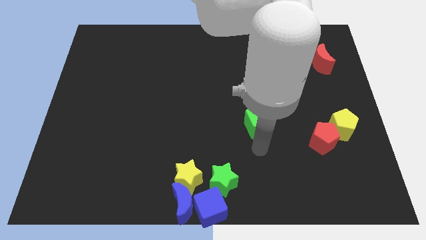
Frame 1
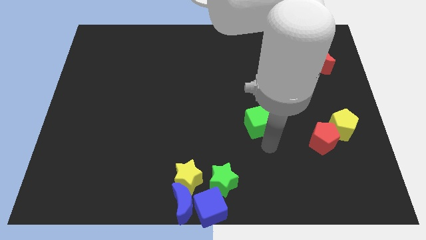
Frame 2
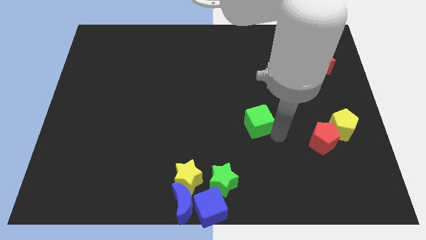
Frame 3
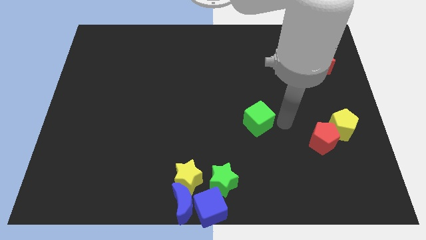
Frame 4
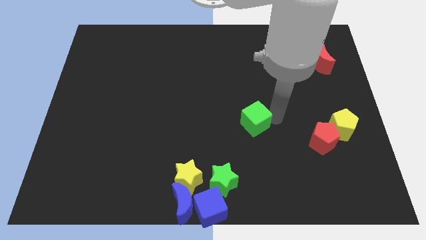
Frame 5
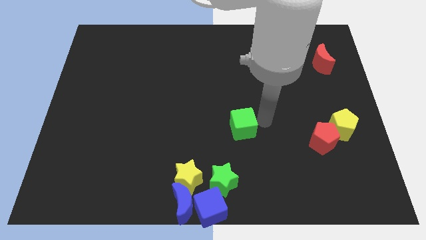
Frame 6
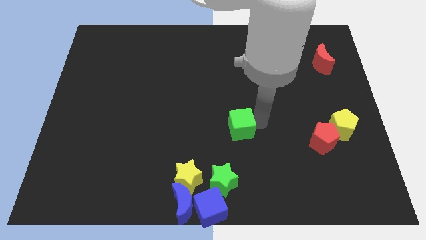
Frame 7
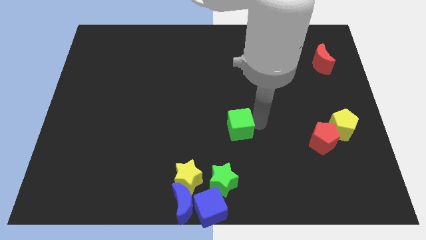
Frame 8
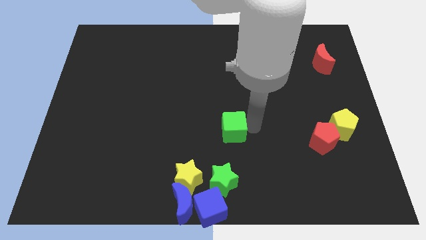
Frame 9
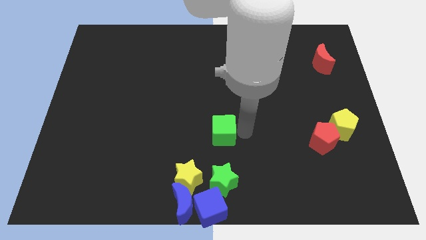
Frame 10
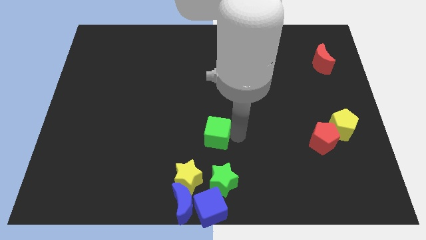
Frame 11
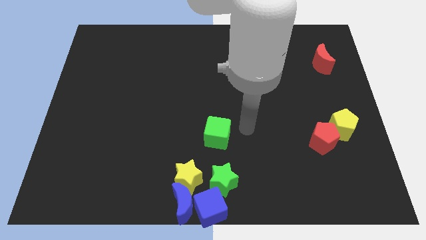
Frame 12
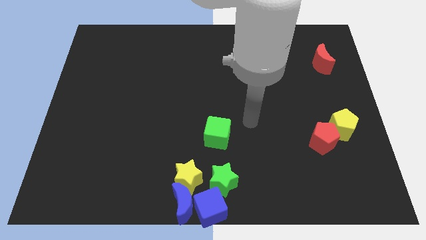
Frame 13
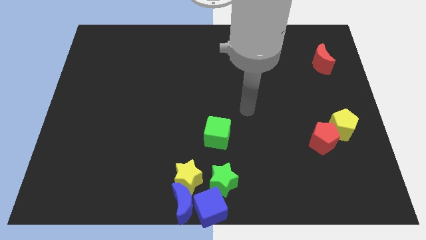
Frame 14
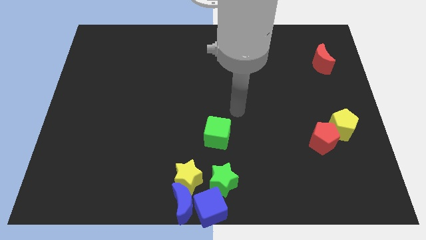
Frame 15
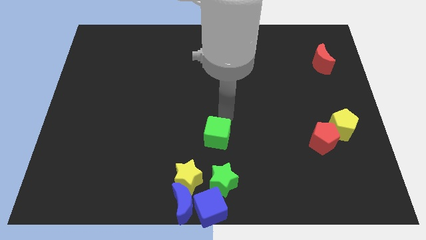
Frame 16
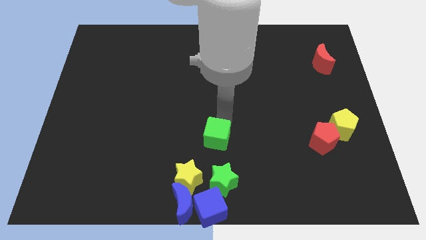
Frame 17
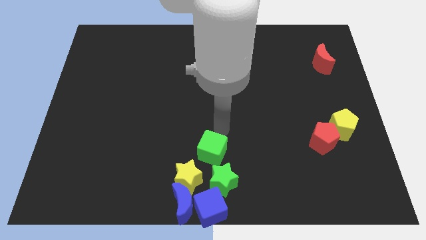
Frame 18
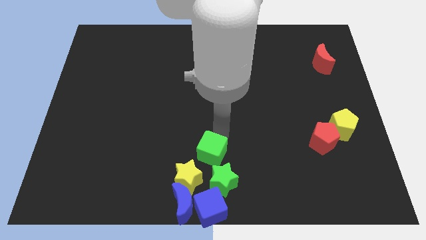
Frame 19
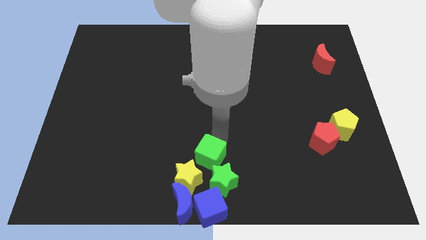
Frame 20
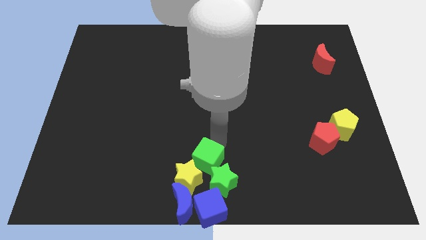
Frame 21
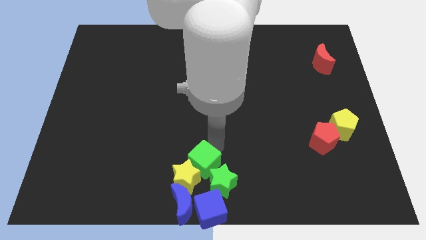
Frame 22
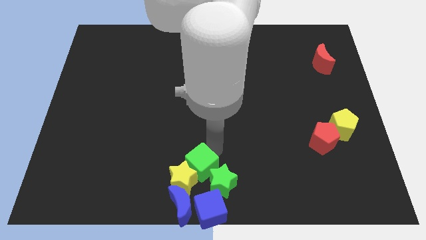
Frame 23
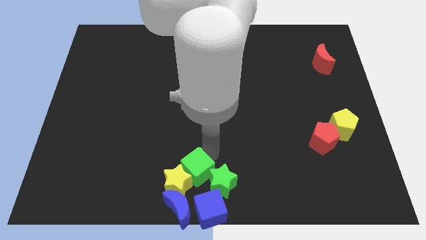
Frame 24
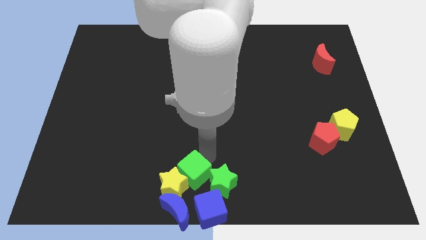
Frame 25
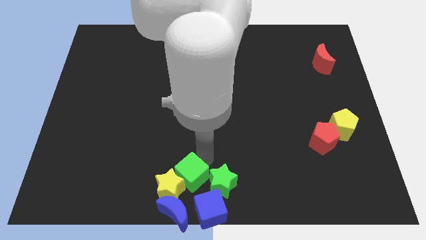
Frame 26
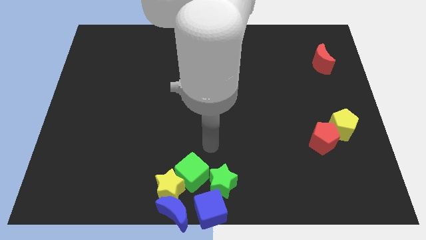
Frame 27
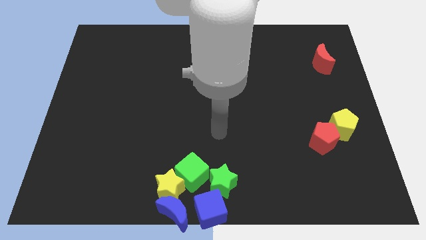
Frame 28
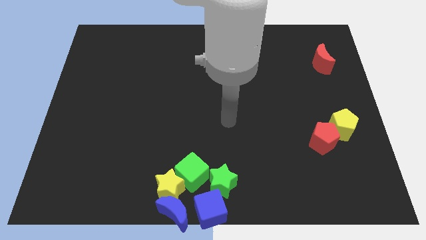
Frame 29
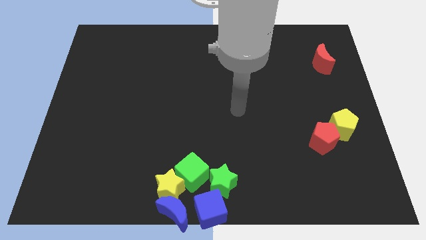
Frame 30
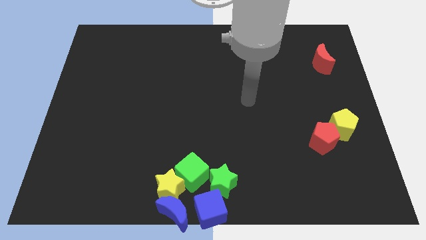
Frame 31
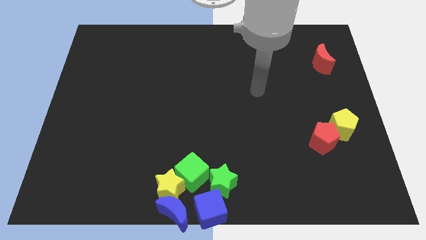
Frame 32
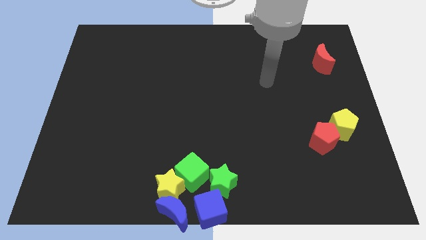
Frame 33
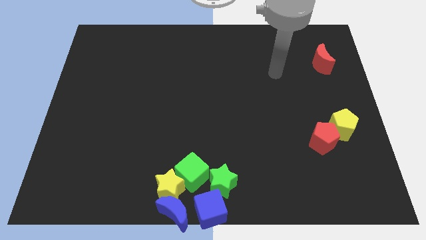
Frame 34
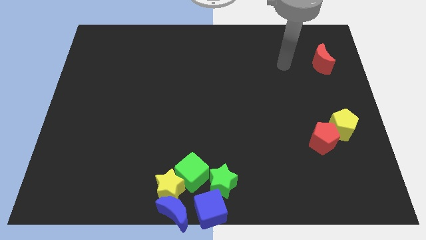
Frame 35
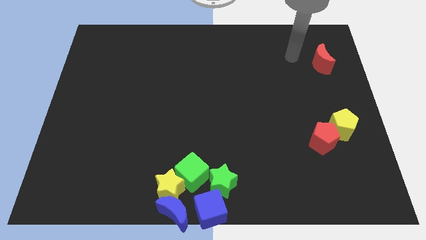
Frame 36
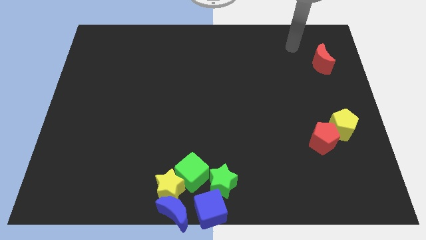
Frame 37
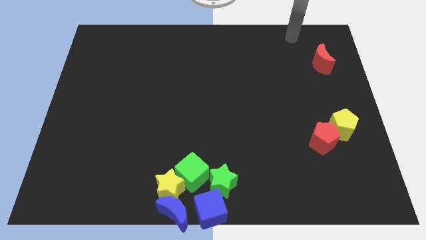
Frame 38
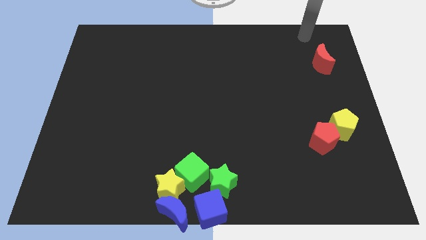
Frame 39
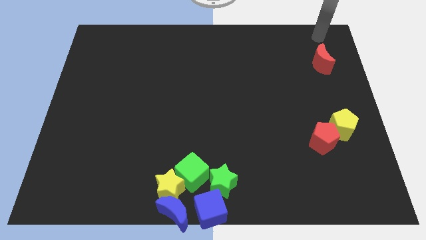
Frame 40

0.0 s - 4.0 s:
move the green cube to the bottom center of the board

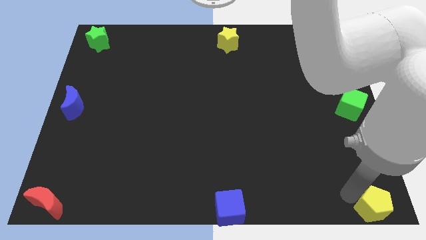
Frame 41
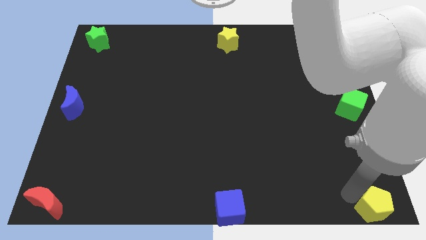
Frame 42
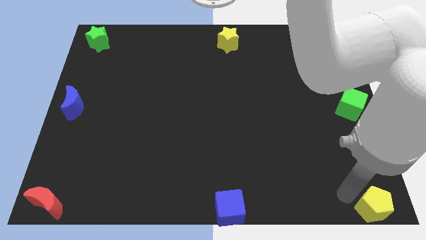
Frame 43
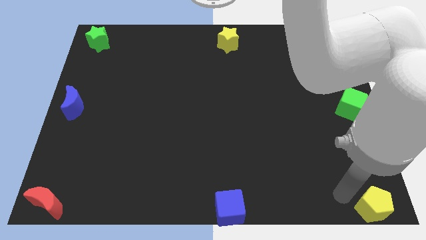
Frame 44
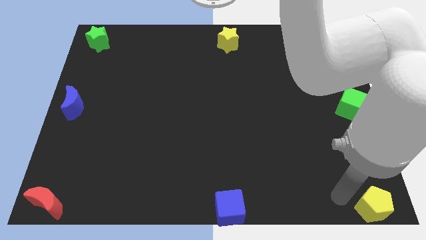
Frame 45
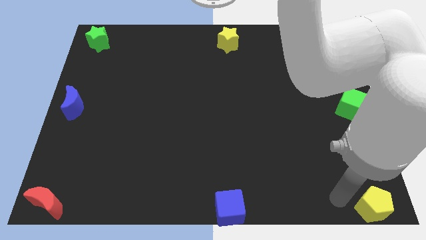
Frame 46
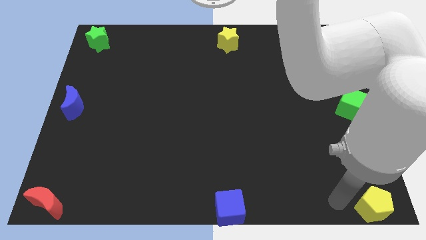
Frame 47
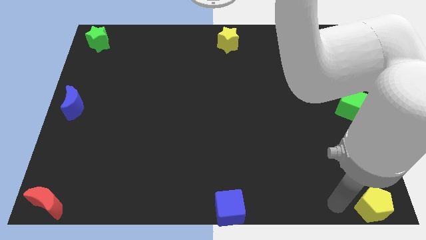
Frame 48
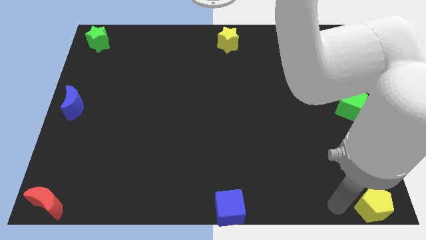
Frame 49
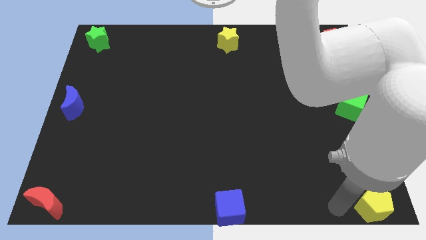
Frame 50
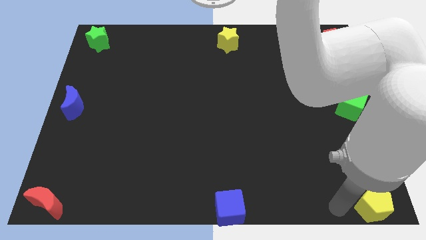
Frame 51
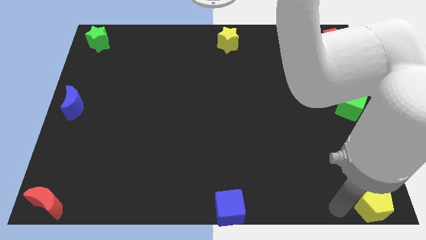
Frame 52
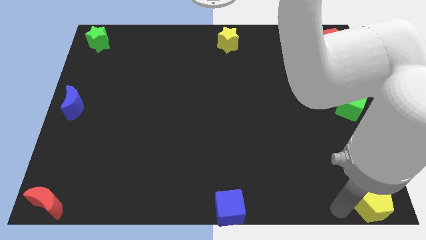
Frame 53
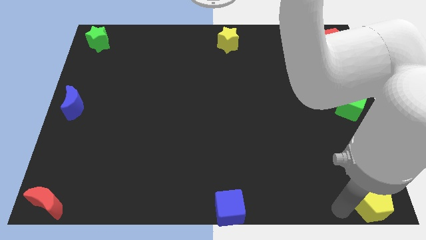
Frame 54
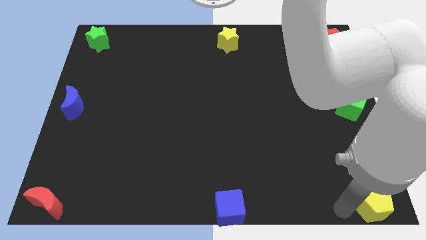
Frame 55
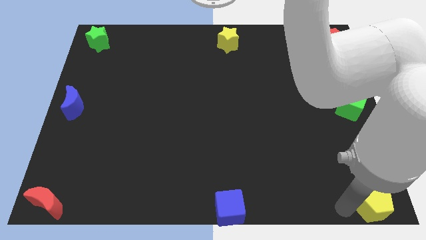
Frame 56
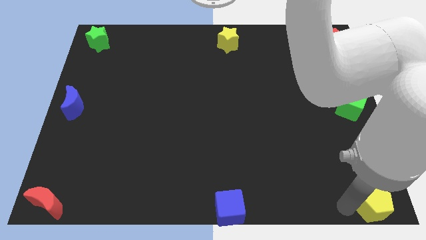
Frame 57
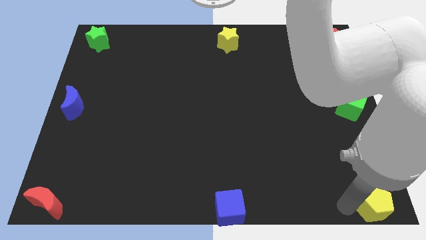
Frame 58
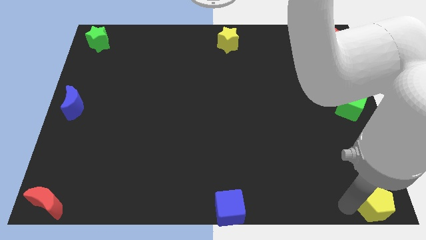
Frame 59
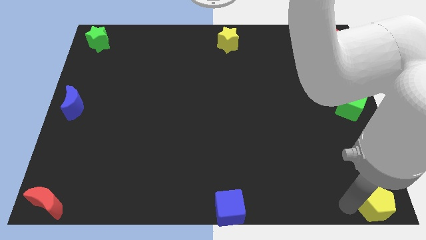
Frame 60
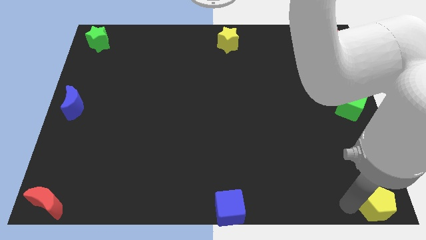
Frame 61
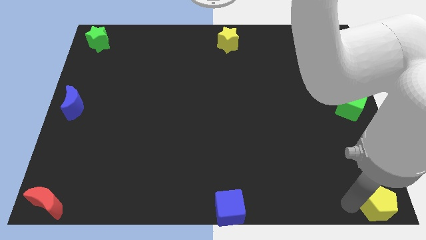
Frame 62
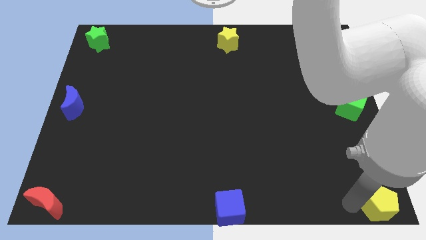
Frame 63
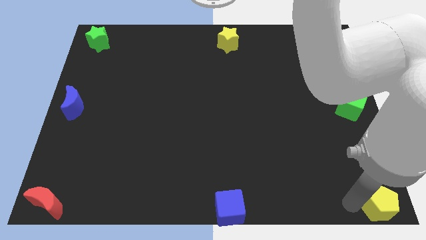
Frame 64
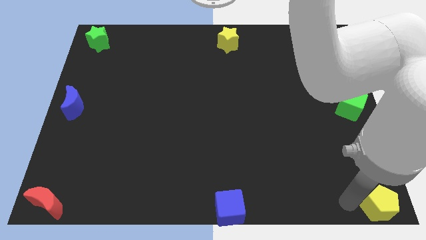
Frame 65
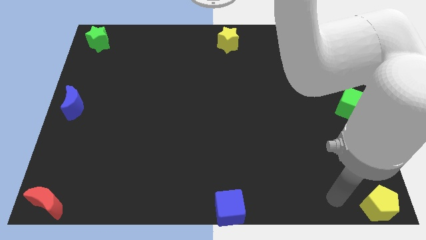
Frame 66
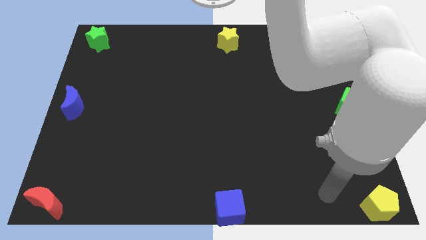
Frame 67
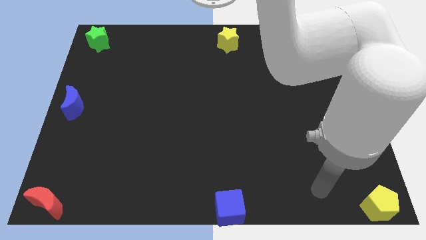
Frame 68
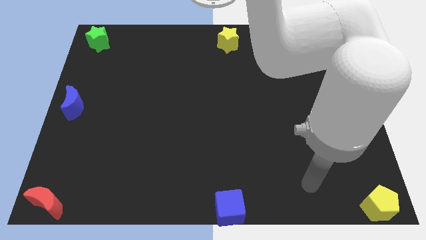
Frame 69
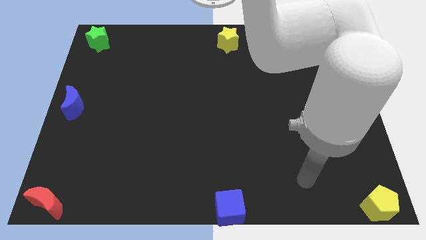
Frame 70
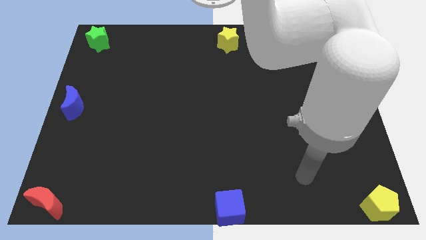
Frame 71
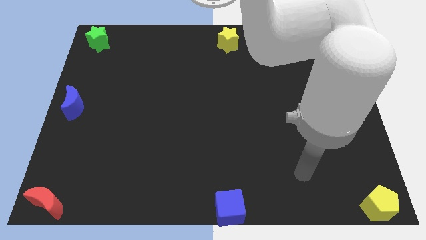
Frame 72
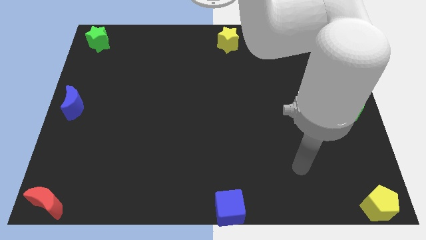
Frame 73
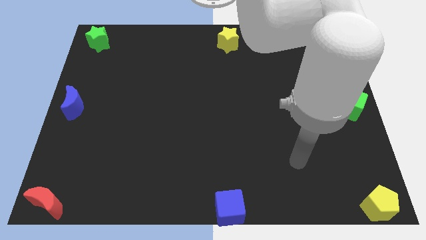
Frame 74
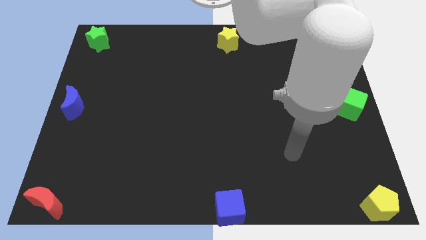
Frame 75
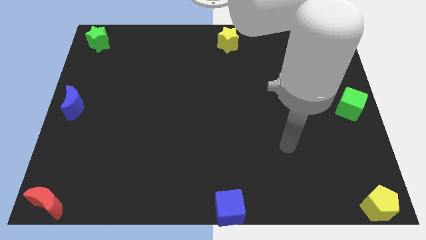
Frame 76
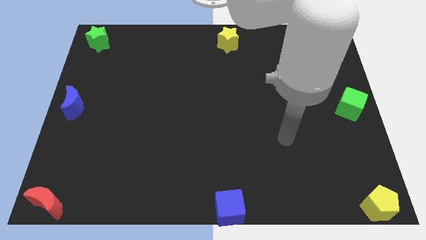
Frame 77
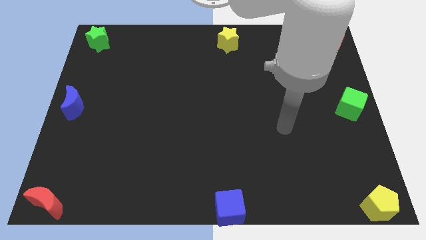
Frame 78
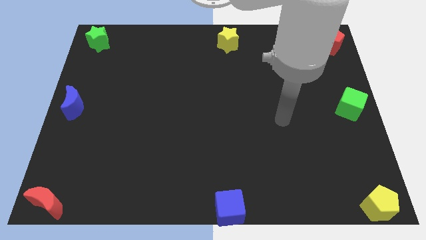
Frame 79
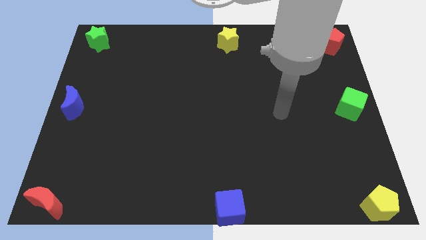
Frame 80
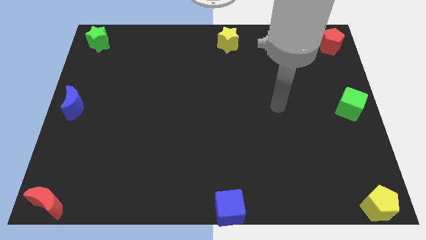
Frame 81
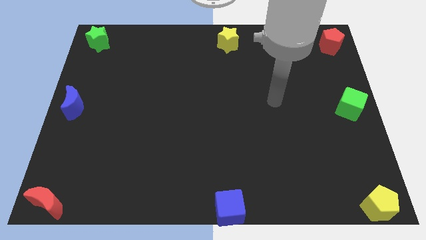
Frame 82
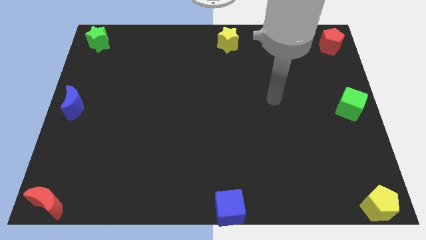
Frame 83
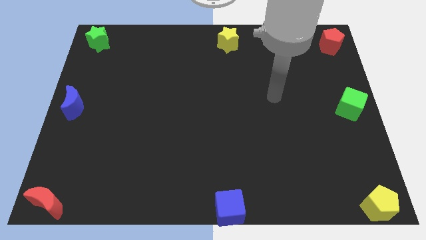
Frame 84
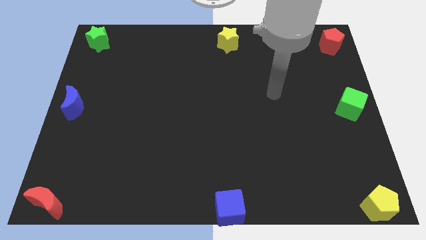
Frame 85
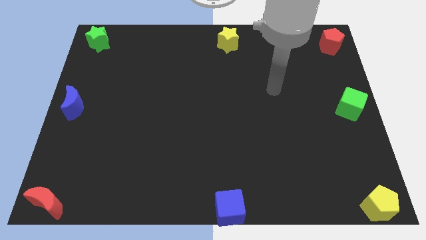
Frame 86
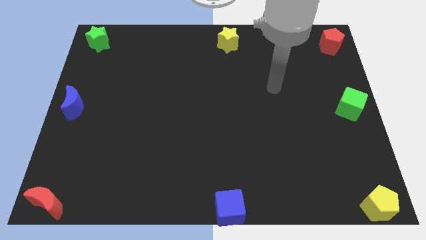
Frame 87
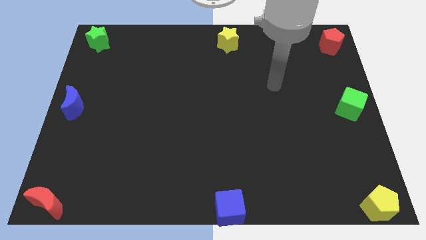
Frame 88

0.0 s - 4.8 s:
move your arm away from the yellow pentagon
